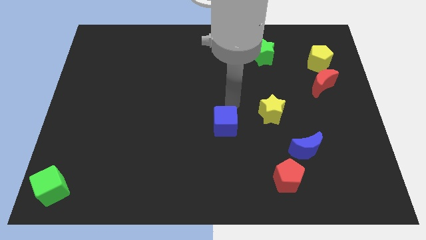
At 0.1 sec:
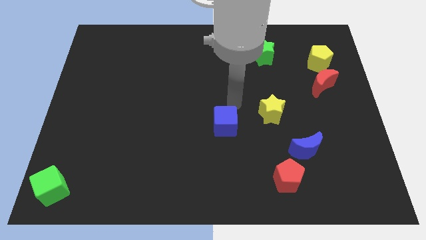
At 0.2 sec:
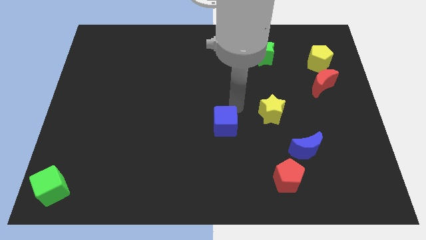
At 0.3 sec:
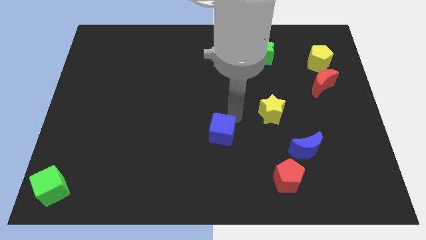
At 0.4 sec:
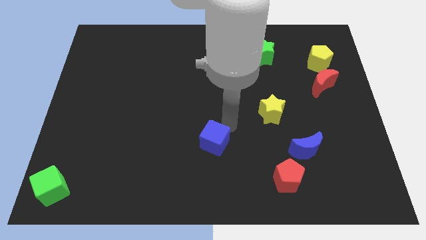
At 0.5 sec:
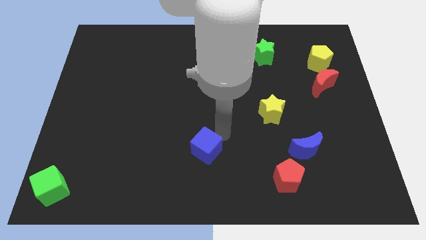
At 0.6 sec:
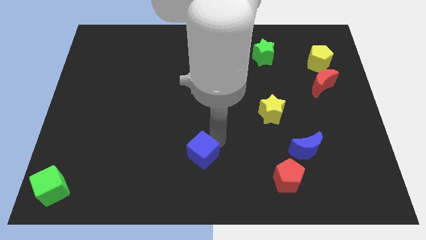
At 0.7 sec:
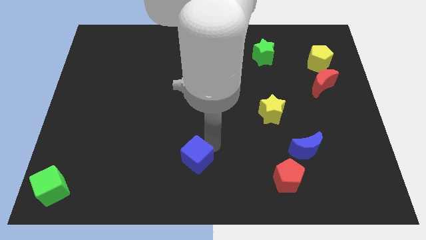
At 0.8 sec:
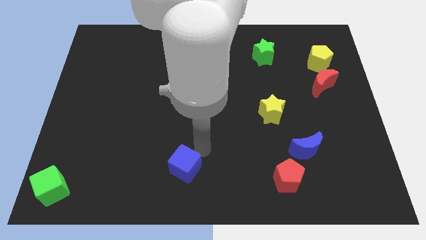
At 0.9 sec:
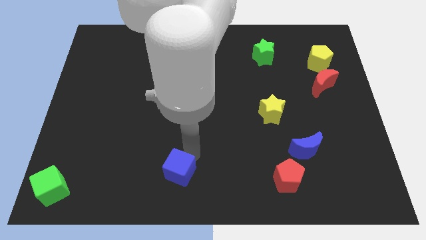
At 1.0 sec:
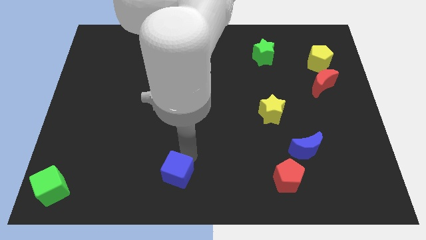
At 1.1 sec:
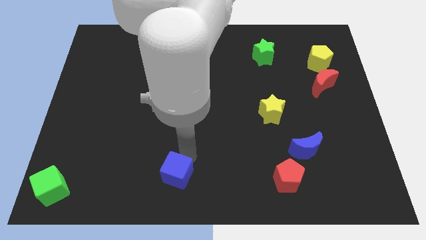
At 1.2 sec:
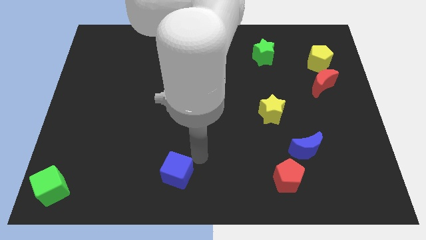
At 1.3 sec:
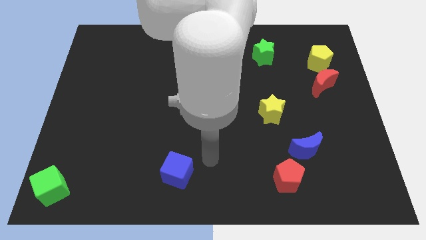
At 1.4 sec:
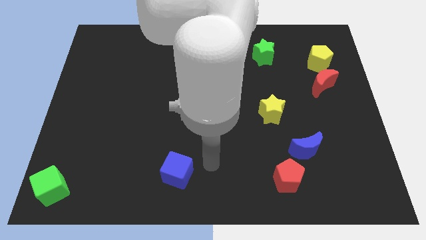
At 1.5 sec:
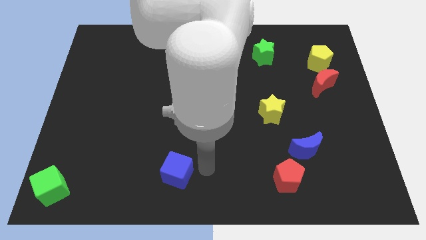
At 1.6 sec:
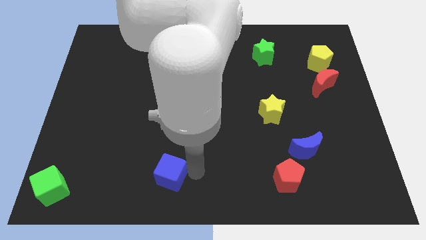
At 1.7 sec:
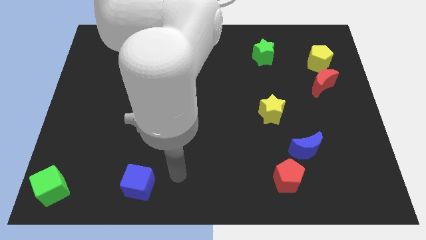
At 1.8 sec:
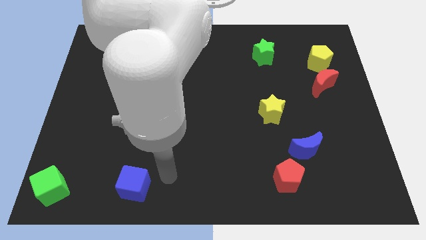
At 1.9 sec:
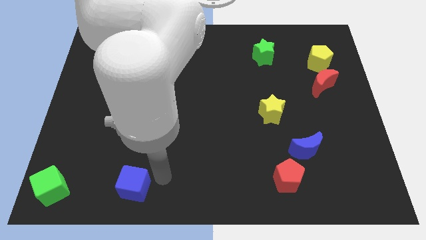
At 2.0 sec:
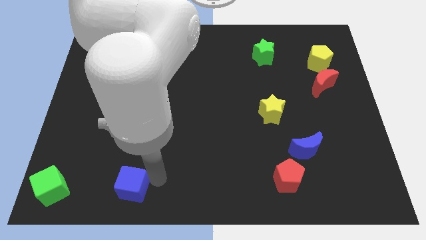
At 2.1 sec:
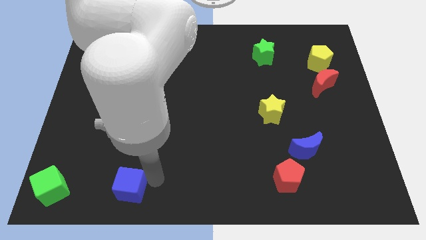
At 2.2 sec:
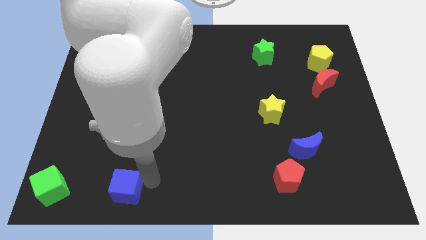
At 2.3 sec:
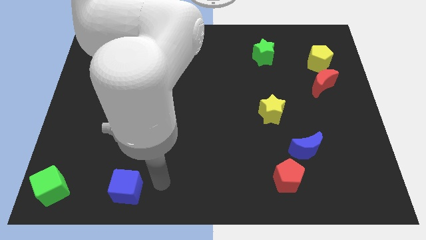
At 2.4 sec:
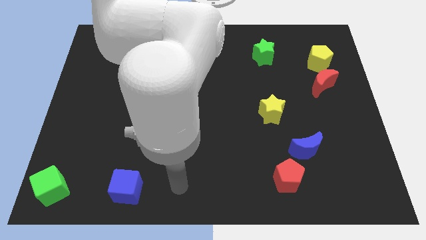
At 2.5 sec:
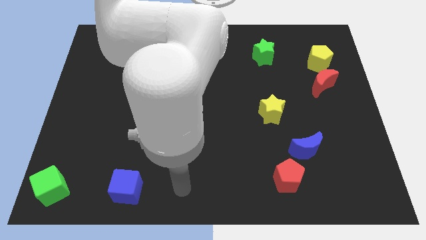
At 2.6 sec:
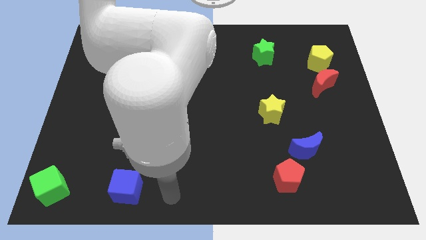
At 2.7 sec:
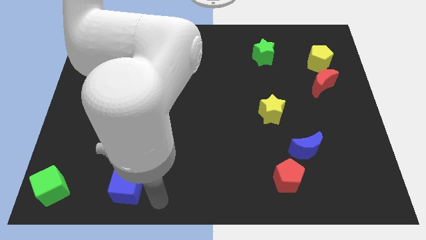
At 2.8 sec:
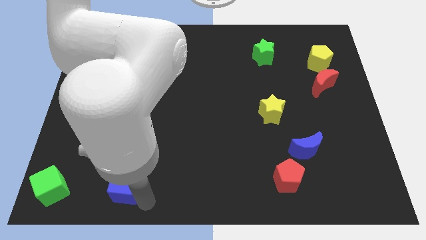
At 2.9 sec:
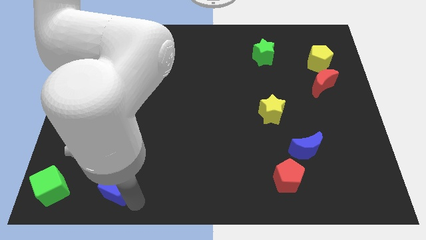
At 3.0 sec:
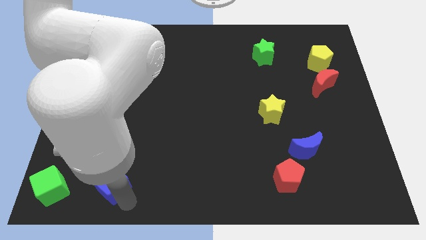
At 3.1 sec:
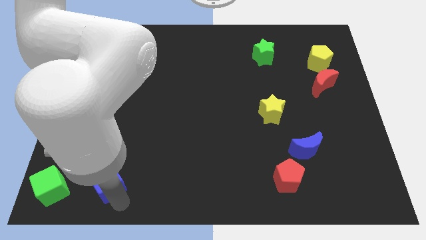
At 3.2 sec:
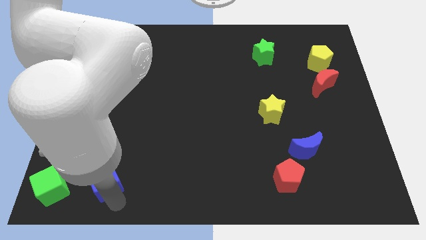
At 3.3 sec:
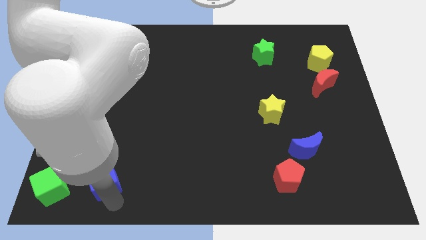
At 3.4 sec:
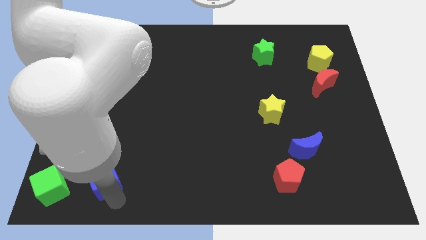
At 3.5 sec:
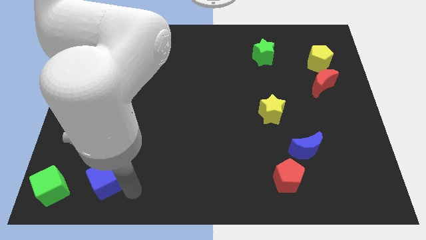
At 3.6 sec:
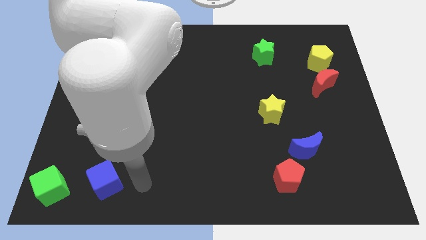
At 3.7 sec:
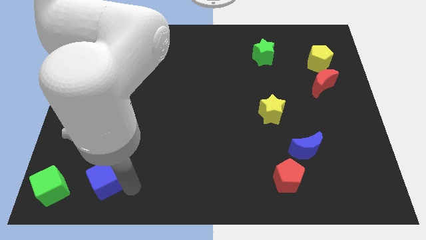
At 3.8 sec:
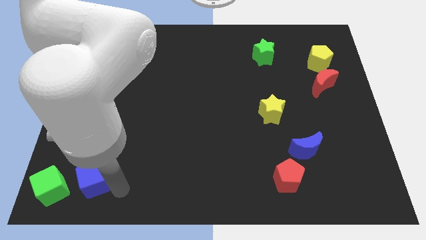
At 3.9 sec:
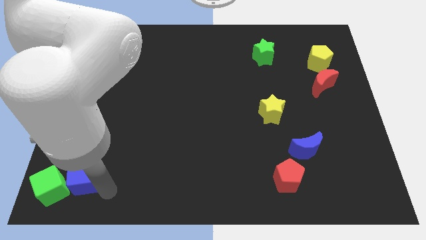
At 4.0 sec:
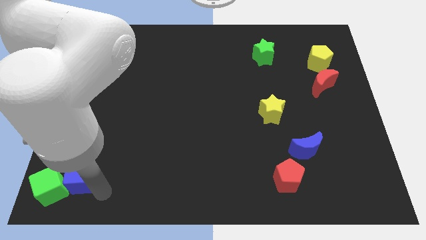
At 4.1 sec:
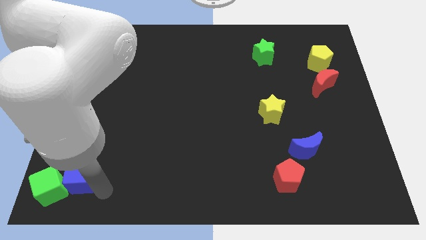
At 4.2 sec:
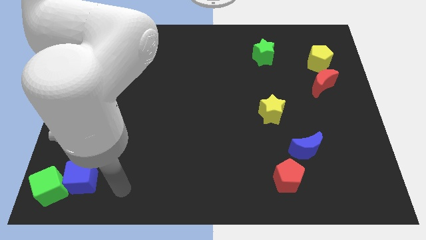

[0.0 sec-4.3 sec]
push the blue cube into the green cube

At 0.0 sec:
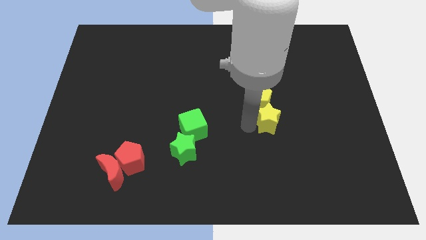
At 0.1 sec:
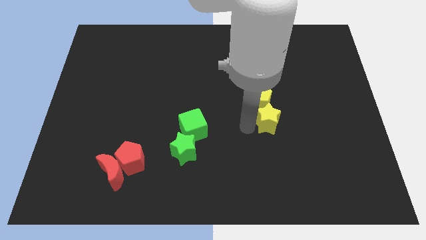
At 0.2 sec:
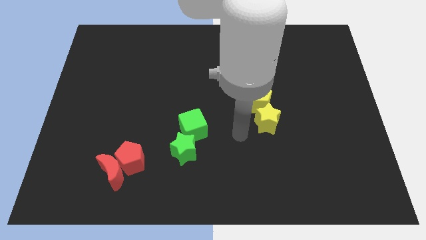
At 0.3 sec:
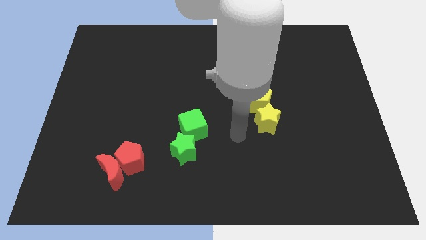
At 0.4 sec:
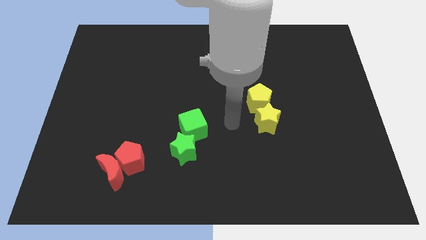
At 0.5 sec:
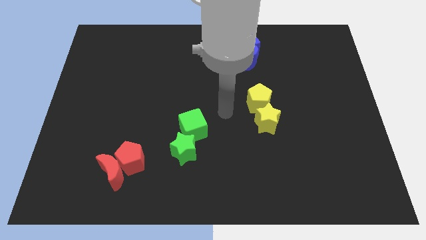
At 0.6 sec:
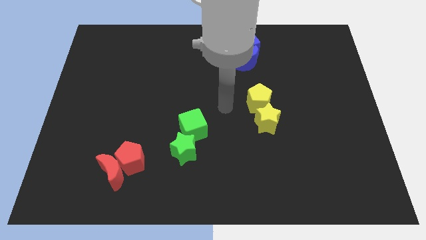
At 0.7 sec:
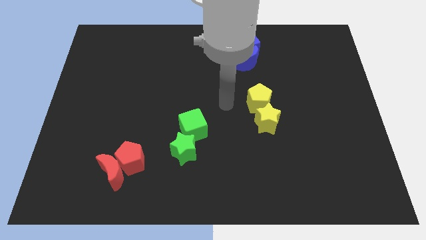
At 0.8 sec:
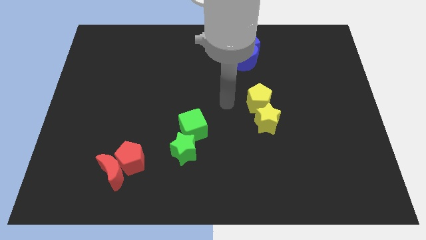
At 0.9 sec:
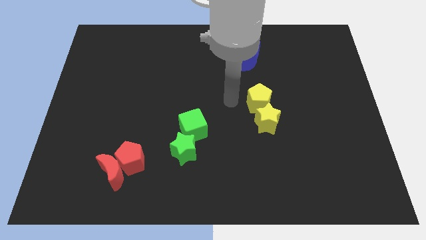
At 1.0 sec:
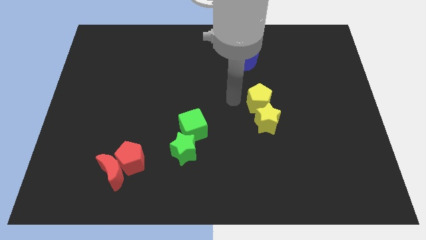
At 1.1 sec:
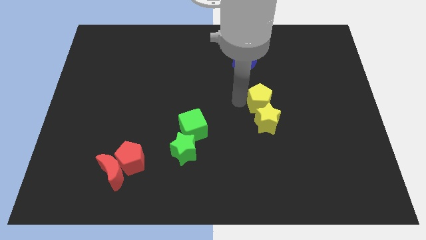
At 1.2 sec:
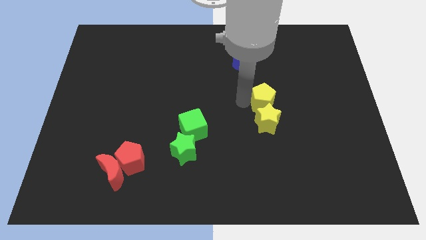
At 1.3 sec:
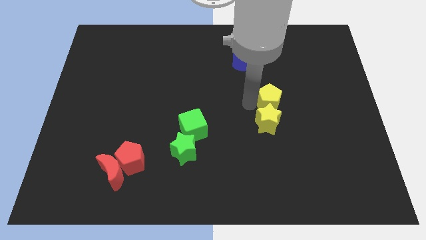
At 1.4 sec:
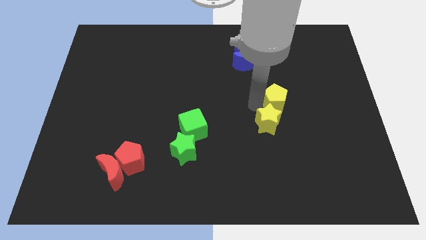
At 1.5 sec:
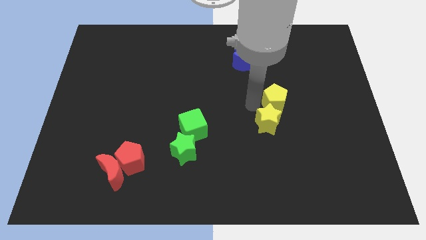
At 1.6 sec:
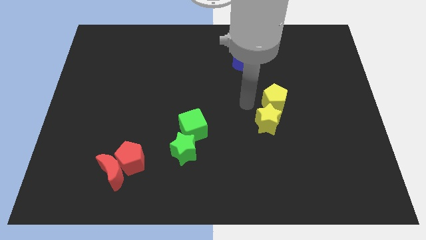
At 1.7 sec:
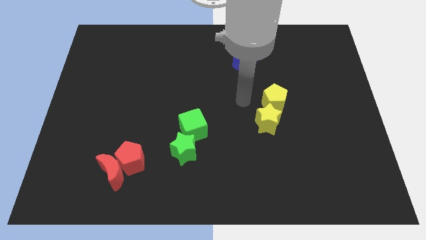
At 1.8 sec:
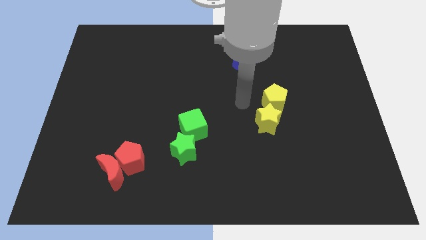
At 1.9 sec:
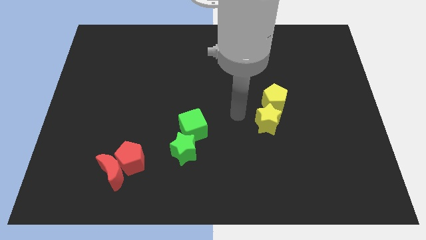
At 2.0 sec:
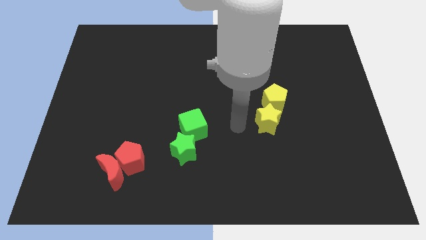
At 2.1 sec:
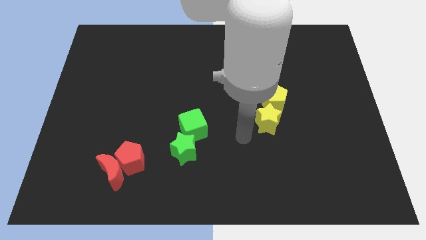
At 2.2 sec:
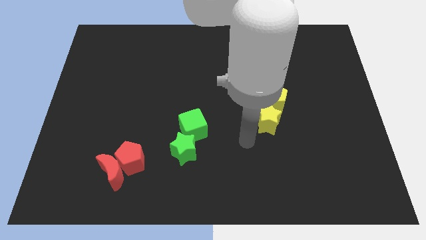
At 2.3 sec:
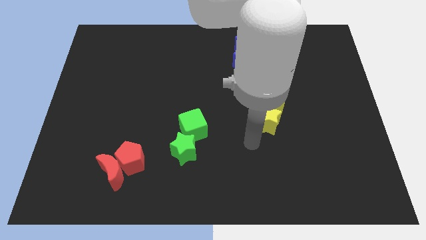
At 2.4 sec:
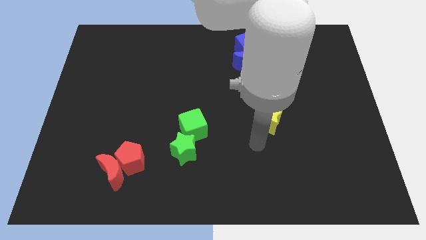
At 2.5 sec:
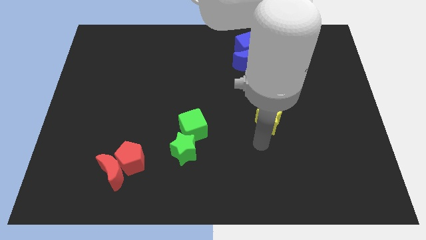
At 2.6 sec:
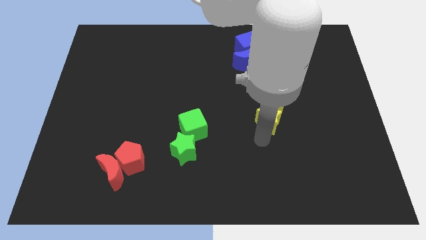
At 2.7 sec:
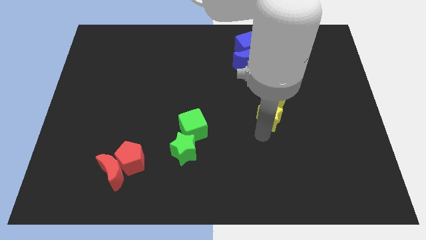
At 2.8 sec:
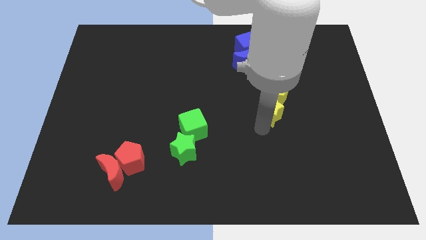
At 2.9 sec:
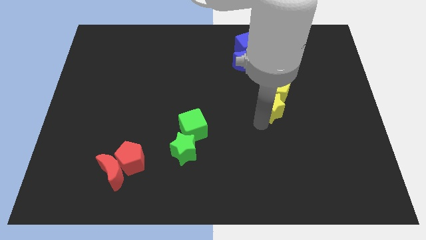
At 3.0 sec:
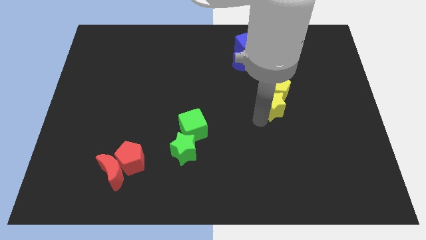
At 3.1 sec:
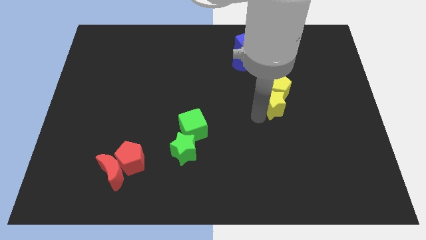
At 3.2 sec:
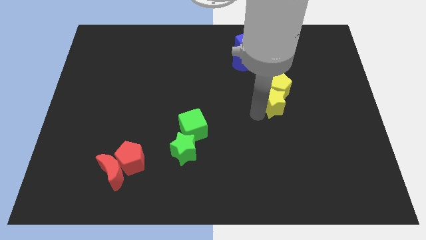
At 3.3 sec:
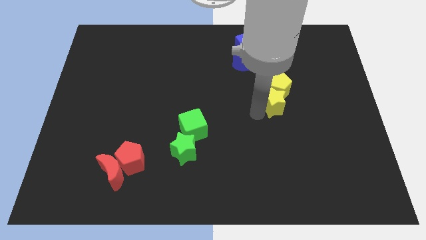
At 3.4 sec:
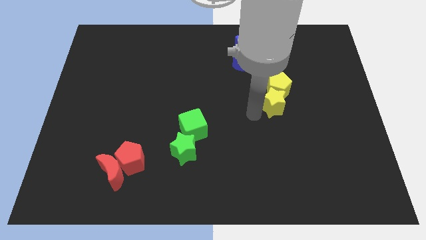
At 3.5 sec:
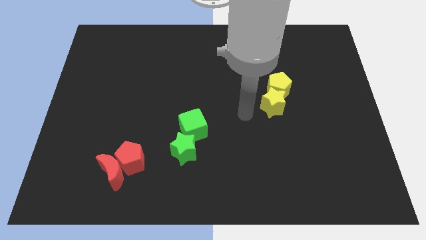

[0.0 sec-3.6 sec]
put the group of yellow blocks at the top right side of the group of green blocks

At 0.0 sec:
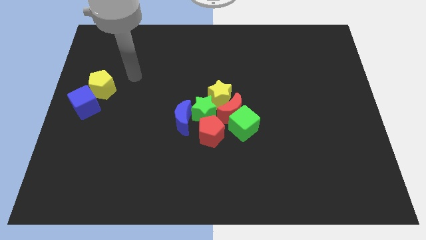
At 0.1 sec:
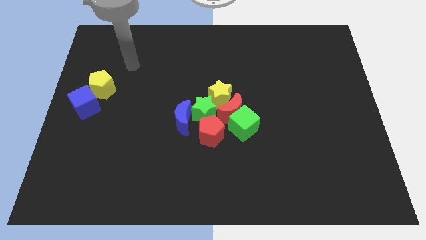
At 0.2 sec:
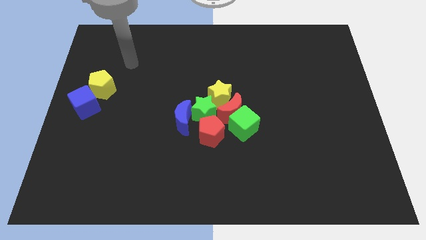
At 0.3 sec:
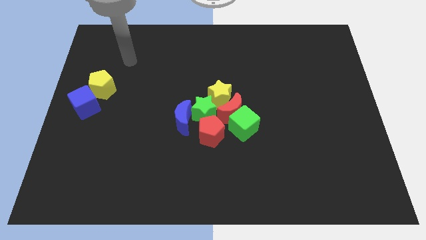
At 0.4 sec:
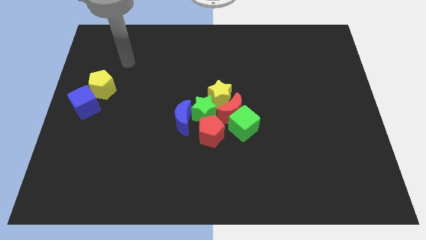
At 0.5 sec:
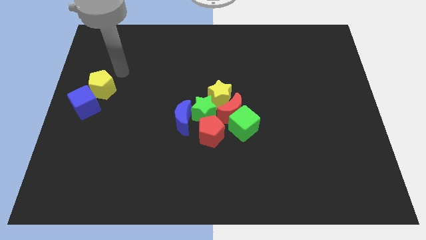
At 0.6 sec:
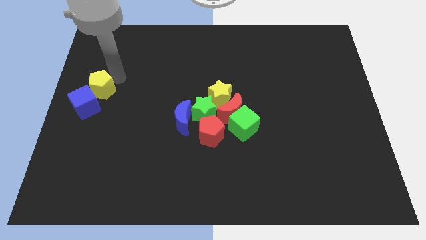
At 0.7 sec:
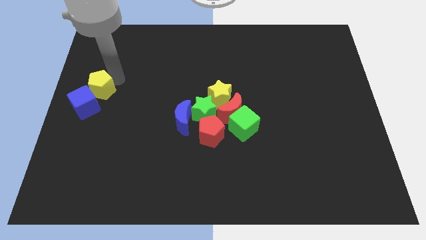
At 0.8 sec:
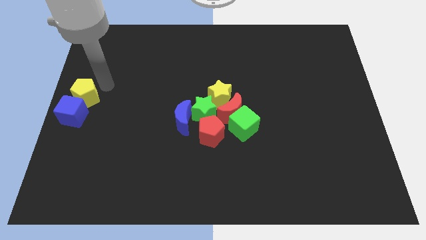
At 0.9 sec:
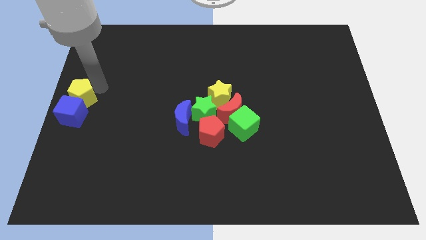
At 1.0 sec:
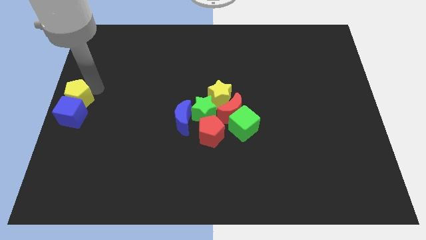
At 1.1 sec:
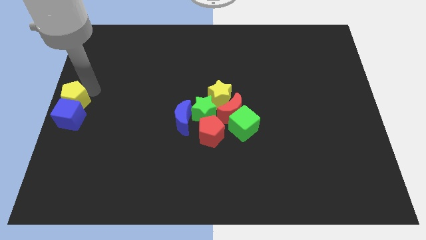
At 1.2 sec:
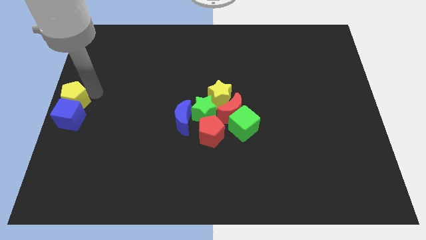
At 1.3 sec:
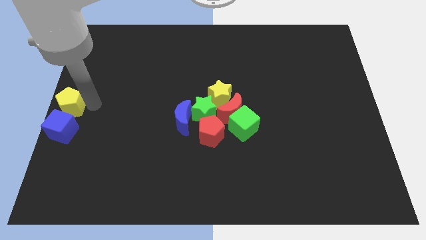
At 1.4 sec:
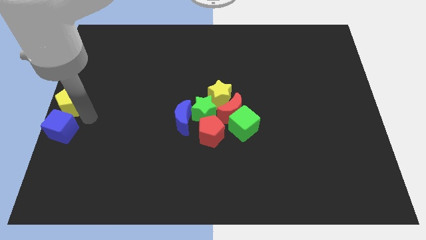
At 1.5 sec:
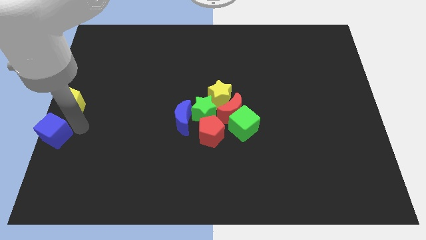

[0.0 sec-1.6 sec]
push the yellow pentagon along with blue cube towards the bottom left corner
